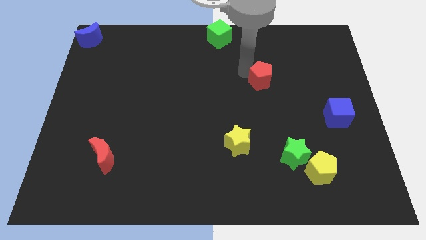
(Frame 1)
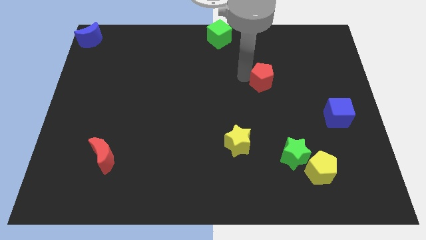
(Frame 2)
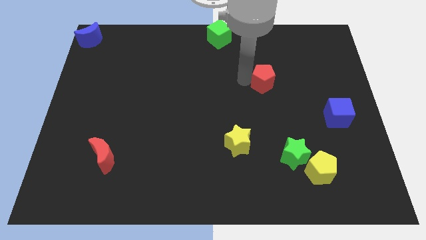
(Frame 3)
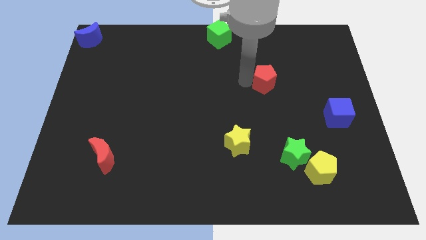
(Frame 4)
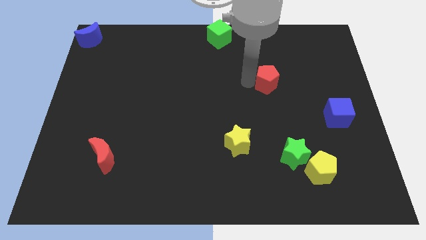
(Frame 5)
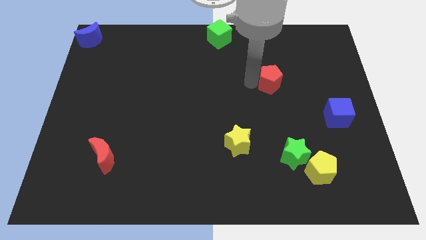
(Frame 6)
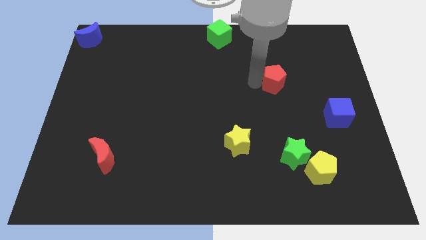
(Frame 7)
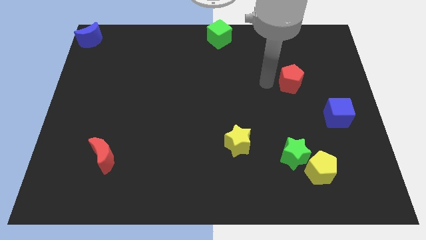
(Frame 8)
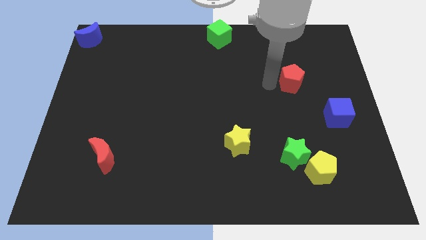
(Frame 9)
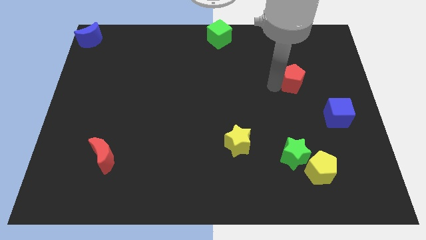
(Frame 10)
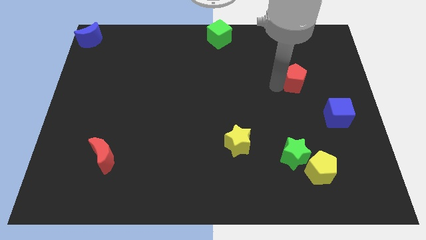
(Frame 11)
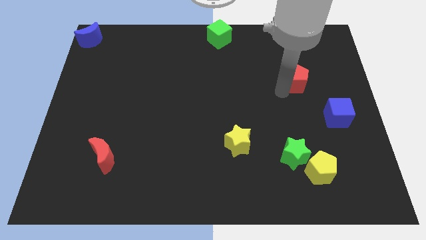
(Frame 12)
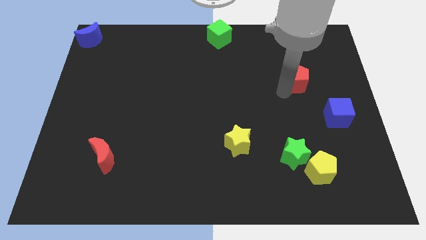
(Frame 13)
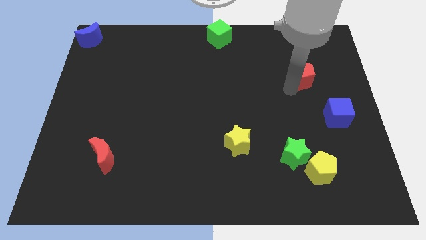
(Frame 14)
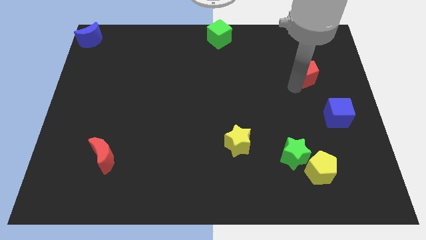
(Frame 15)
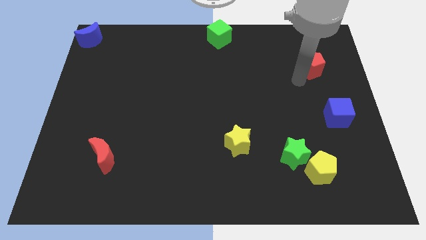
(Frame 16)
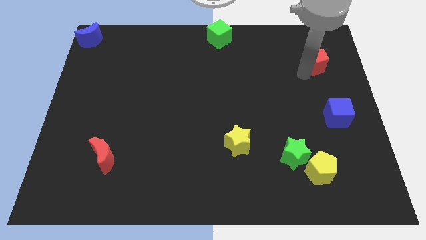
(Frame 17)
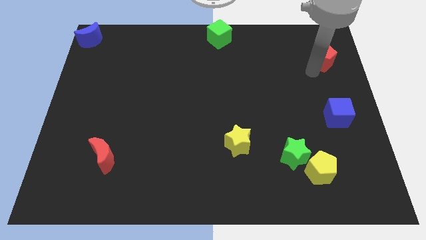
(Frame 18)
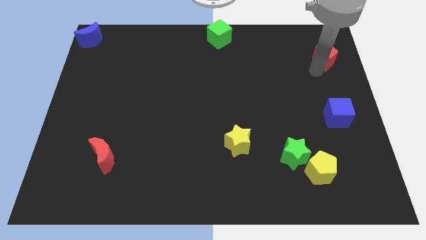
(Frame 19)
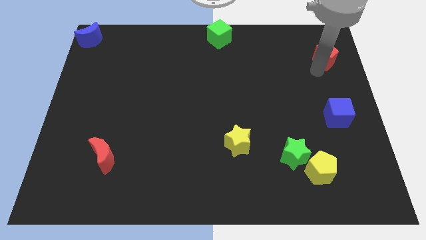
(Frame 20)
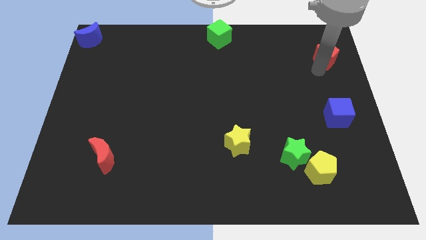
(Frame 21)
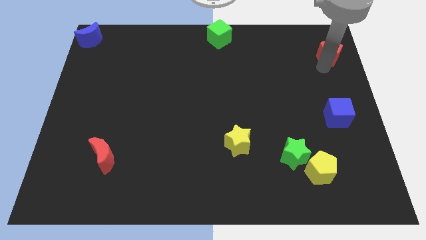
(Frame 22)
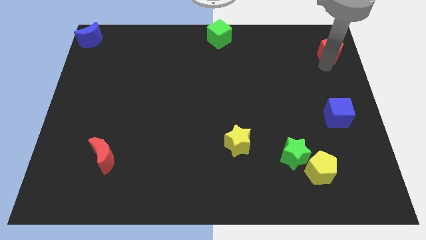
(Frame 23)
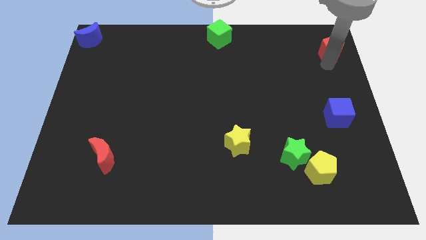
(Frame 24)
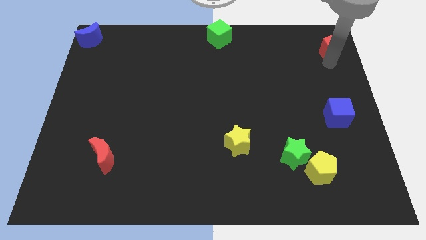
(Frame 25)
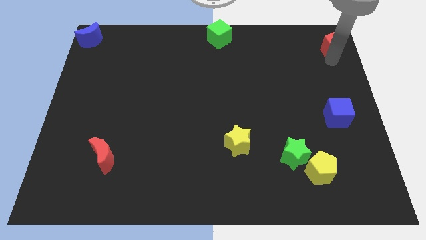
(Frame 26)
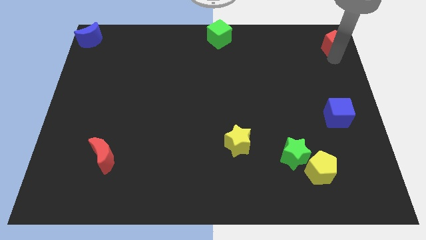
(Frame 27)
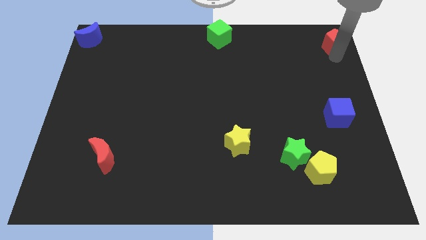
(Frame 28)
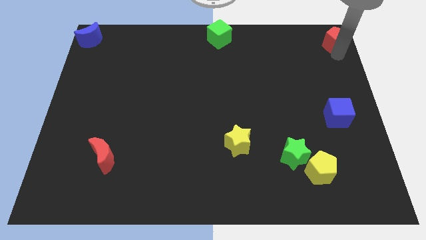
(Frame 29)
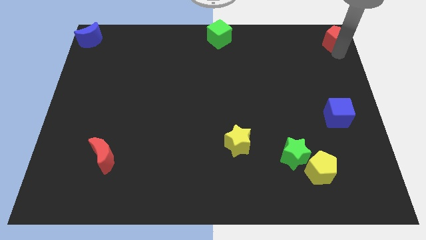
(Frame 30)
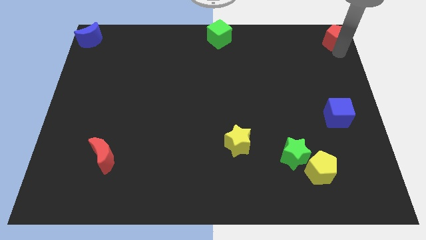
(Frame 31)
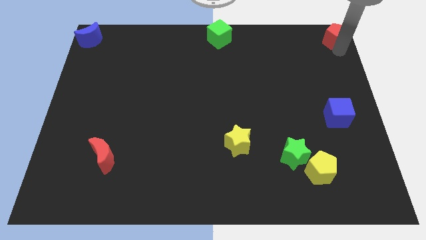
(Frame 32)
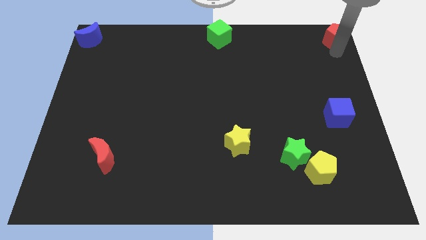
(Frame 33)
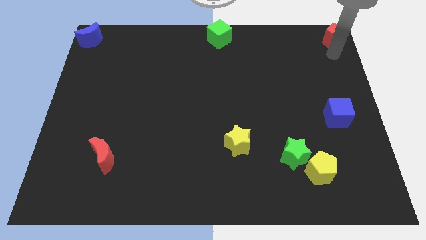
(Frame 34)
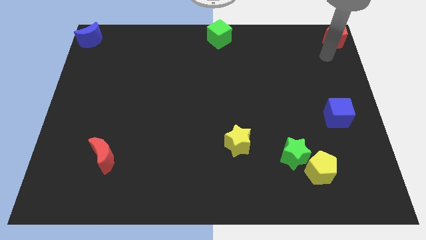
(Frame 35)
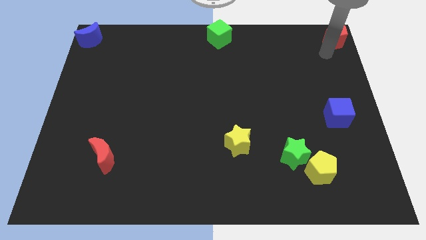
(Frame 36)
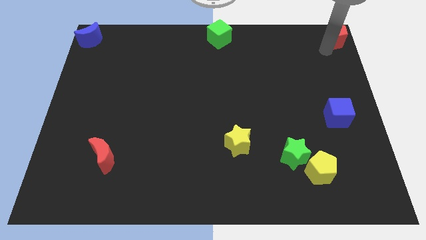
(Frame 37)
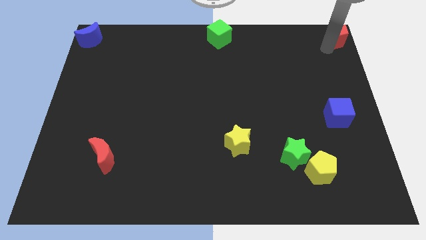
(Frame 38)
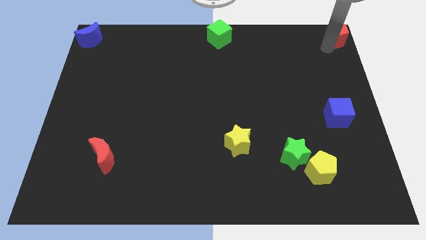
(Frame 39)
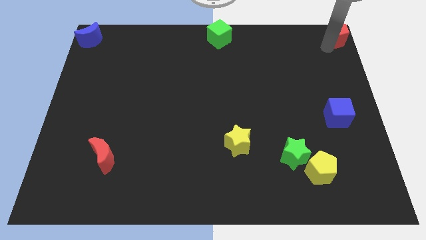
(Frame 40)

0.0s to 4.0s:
move the red pentagon towards top right corner

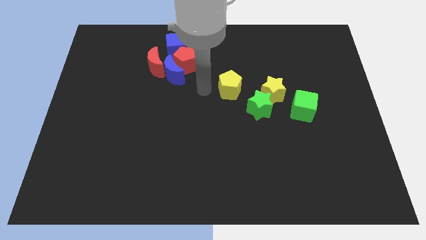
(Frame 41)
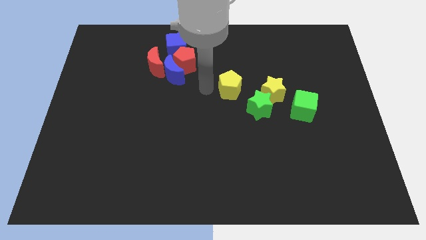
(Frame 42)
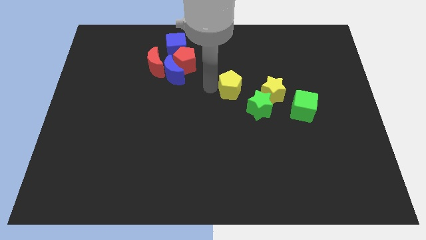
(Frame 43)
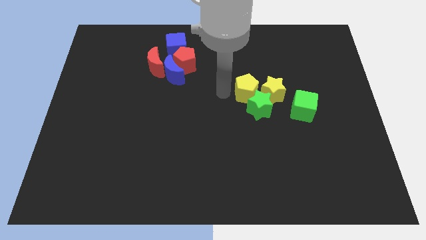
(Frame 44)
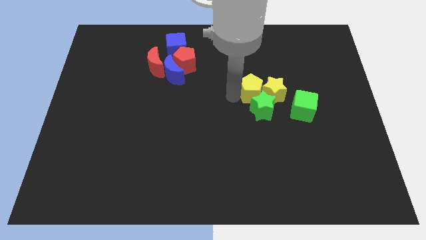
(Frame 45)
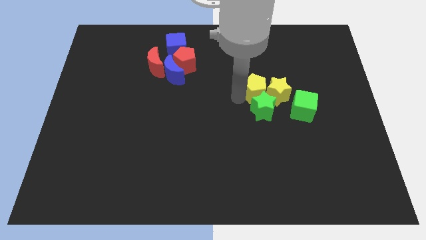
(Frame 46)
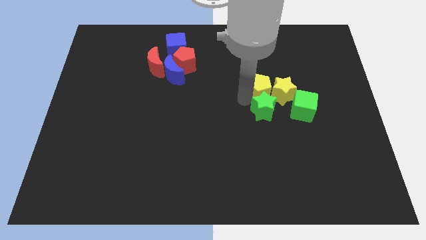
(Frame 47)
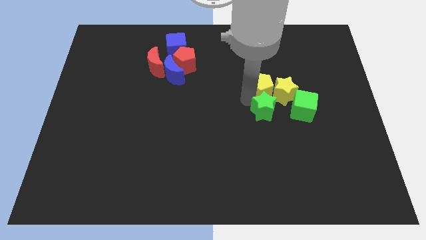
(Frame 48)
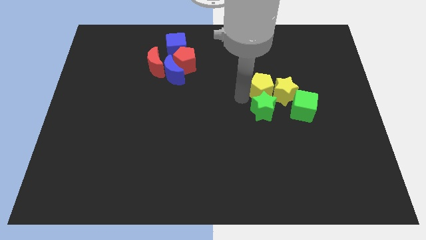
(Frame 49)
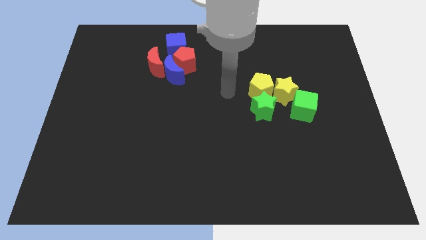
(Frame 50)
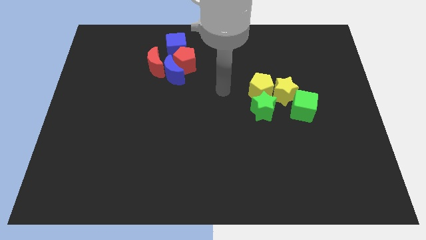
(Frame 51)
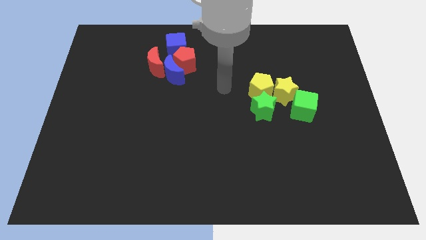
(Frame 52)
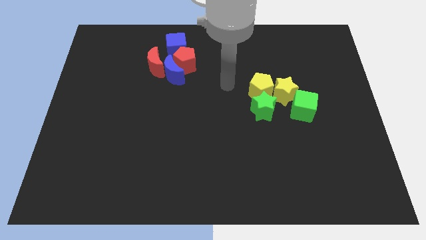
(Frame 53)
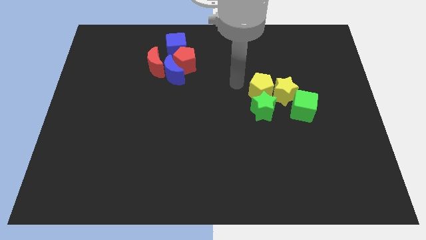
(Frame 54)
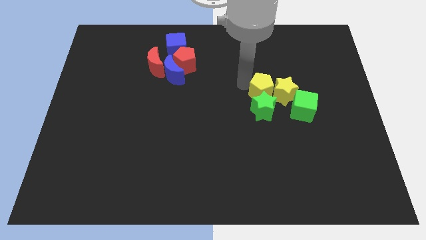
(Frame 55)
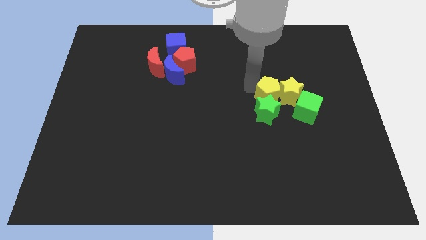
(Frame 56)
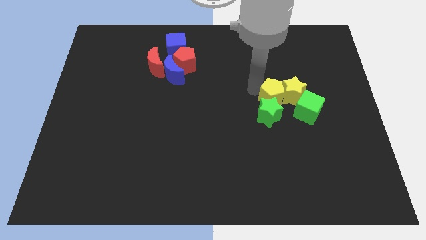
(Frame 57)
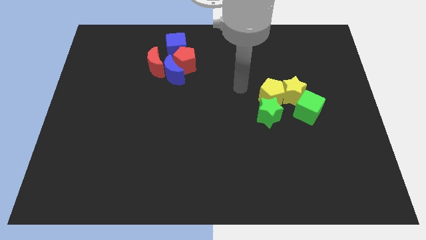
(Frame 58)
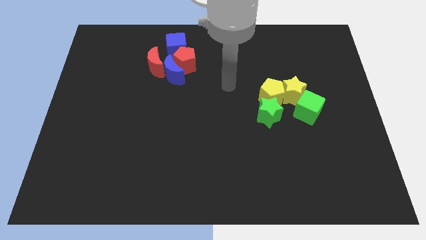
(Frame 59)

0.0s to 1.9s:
push the yellow pentagon into the yellow star

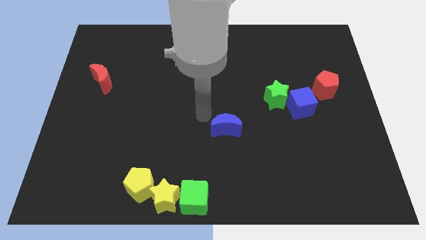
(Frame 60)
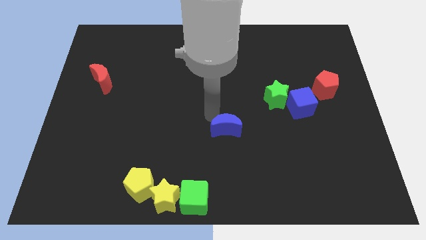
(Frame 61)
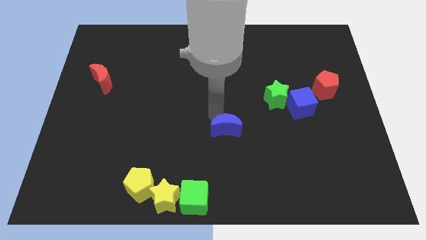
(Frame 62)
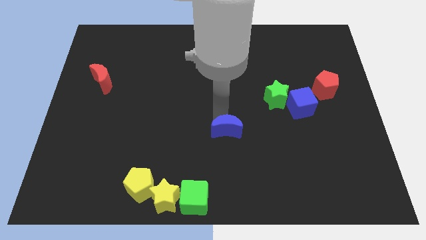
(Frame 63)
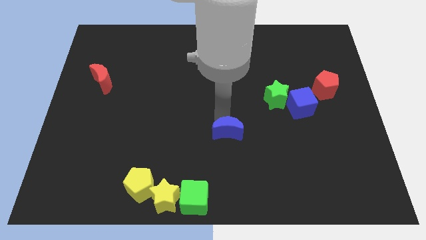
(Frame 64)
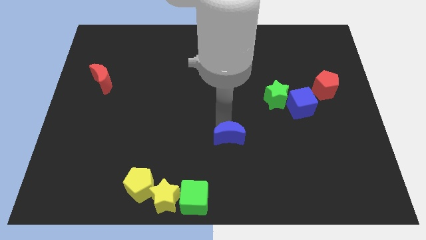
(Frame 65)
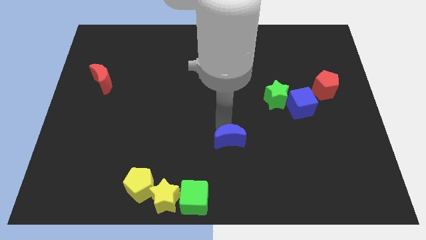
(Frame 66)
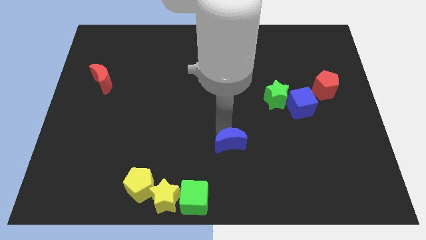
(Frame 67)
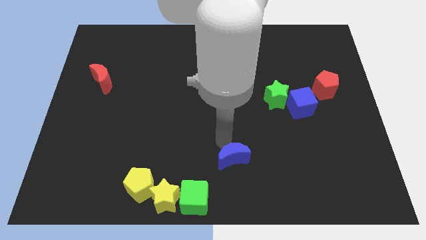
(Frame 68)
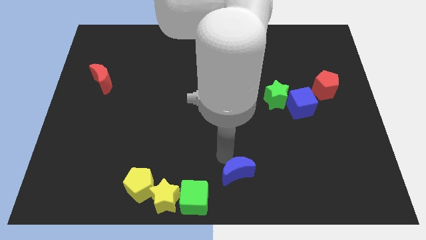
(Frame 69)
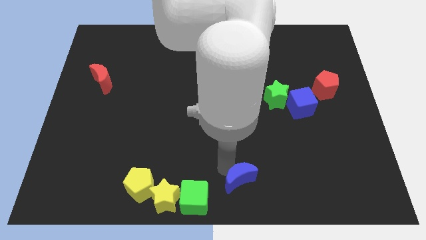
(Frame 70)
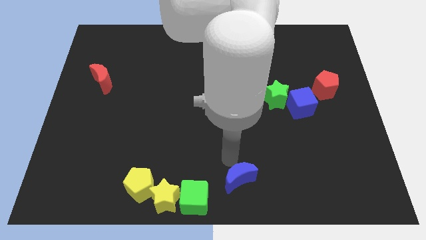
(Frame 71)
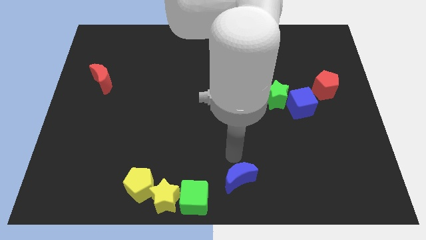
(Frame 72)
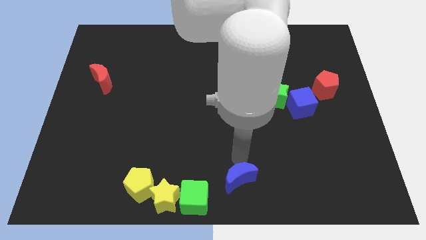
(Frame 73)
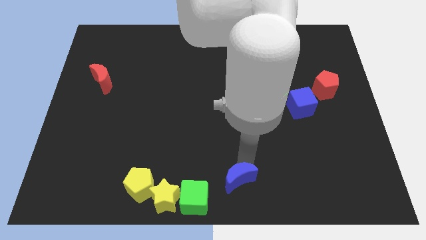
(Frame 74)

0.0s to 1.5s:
push the blue crescent to the top right side of the green cube

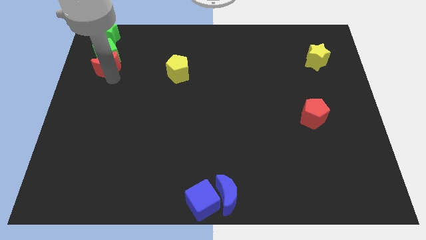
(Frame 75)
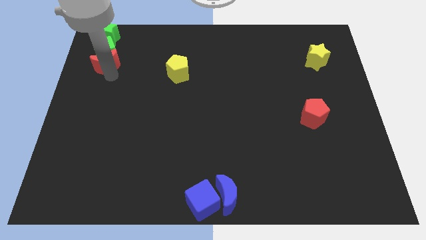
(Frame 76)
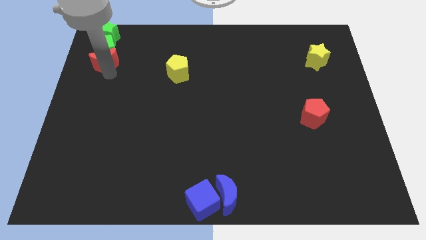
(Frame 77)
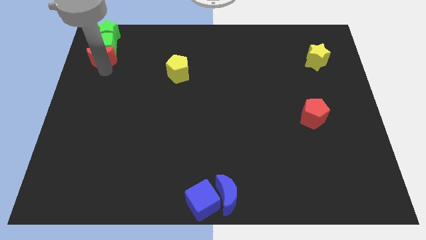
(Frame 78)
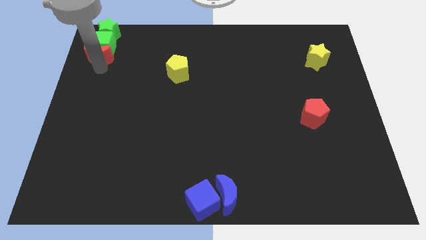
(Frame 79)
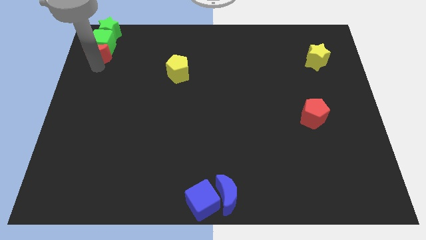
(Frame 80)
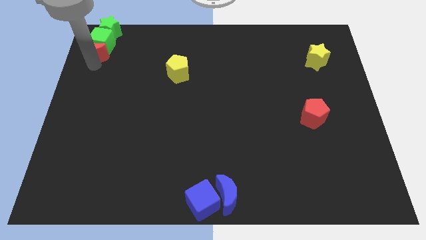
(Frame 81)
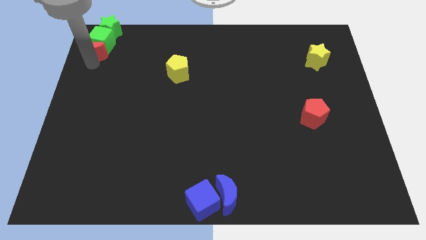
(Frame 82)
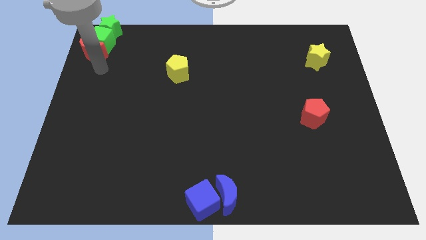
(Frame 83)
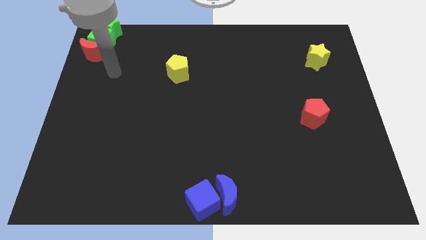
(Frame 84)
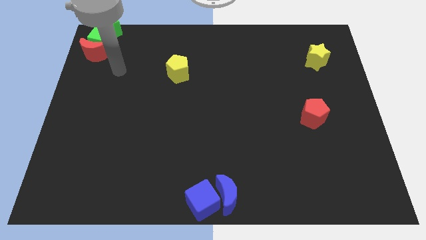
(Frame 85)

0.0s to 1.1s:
push red moon into the green cube and green star at top left

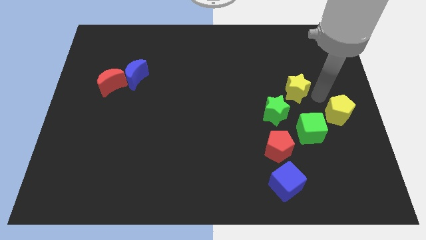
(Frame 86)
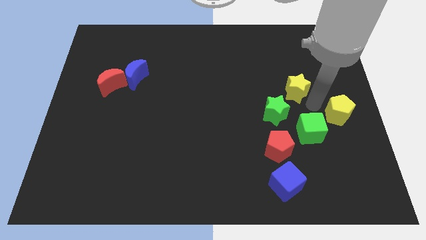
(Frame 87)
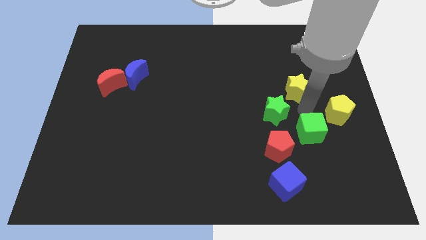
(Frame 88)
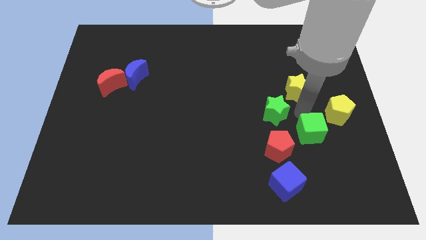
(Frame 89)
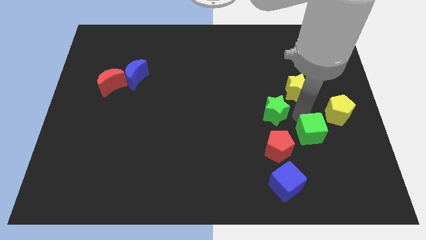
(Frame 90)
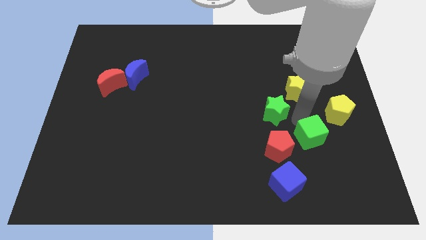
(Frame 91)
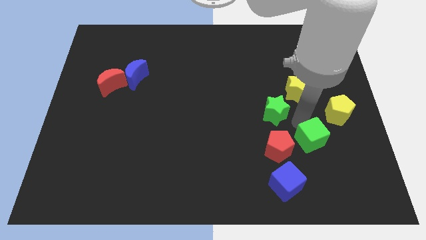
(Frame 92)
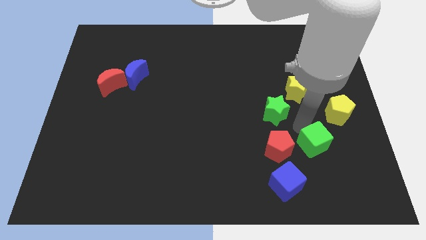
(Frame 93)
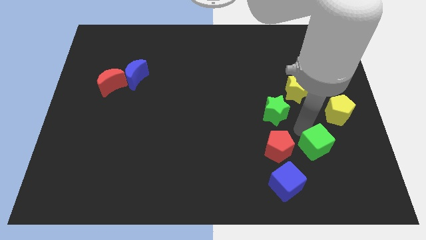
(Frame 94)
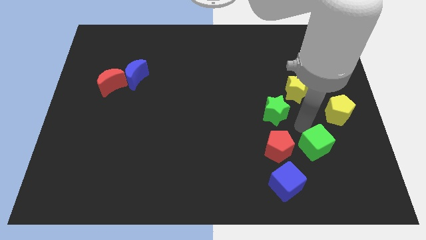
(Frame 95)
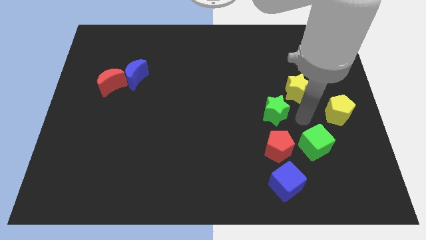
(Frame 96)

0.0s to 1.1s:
push green cube beside red pentagon
